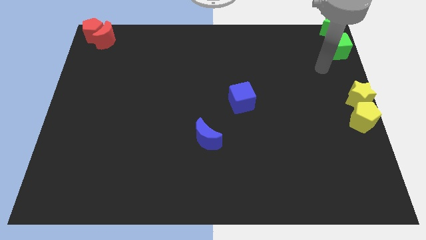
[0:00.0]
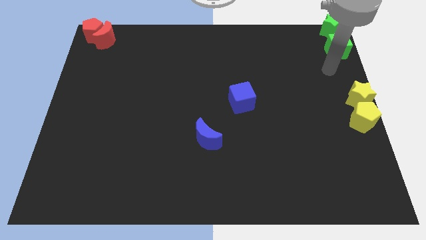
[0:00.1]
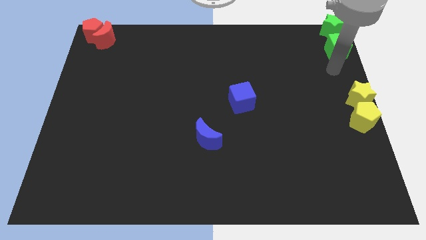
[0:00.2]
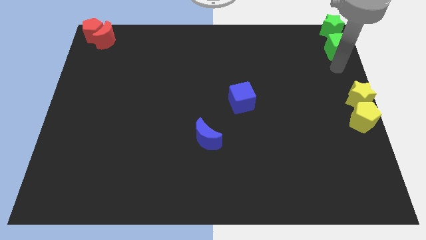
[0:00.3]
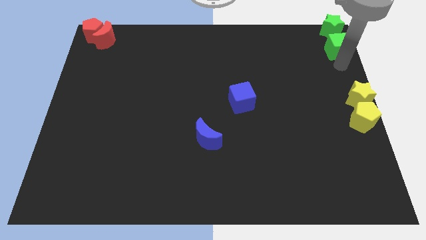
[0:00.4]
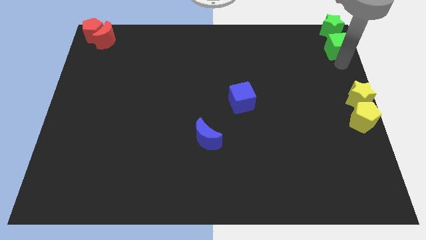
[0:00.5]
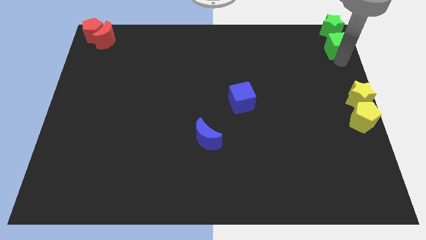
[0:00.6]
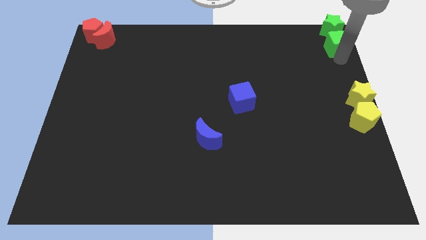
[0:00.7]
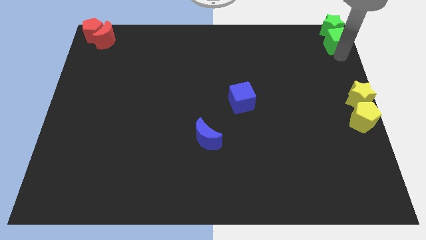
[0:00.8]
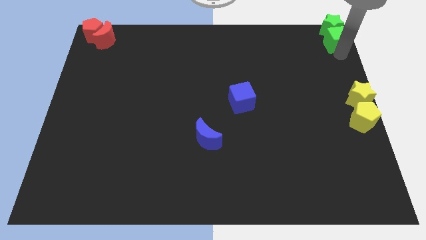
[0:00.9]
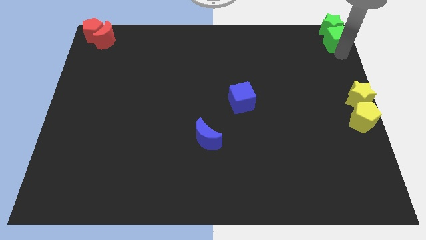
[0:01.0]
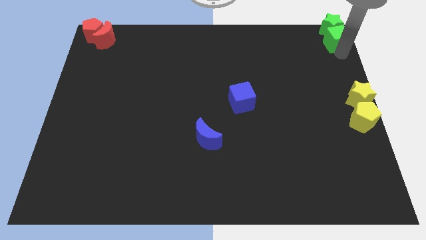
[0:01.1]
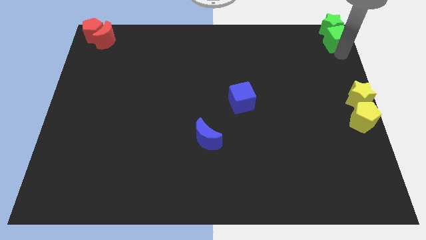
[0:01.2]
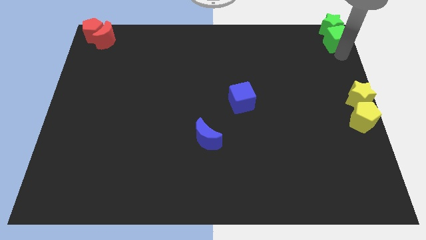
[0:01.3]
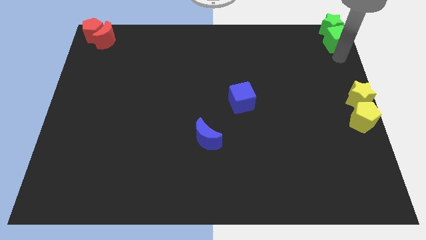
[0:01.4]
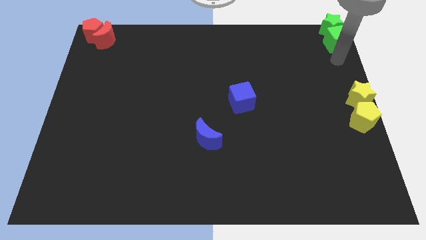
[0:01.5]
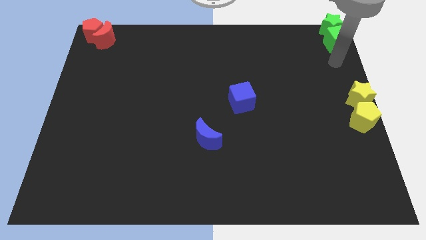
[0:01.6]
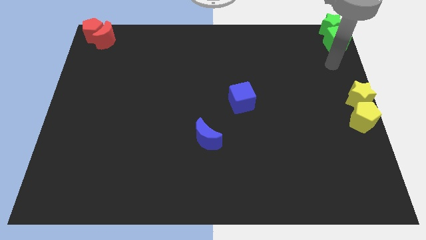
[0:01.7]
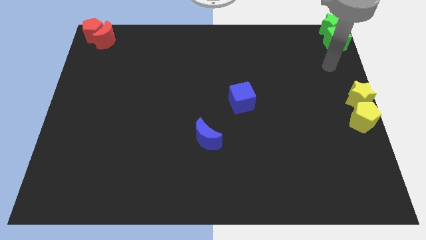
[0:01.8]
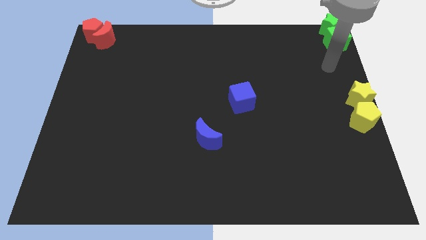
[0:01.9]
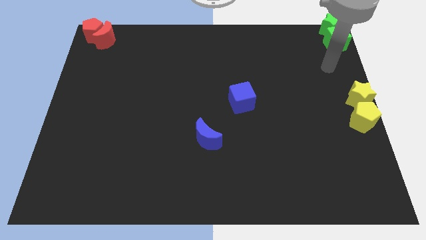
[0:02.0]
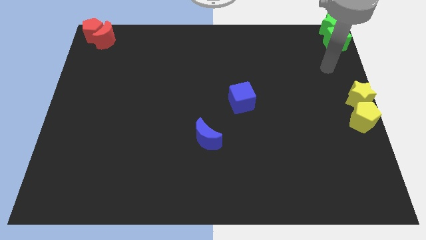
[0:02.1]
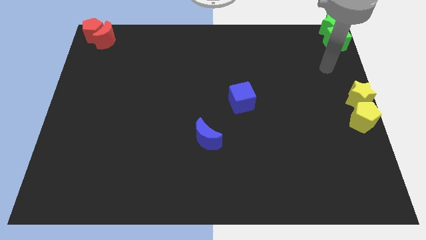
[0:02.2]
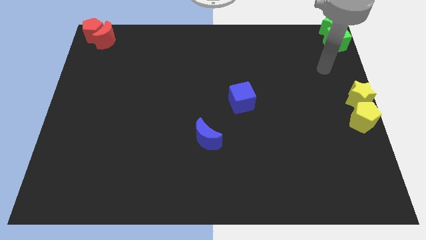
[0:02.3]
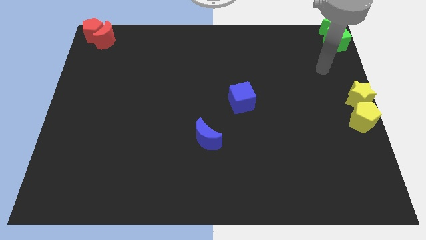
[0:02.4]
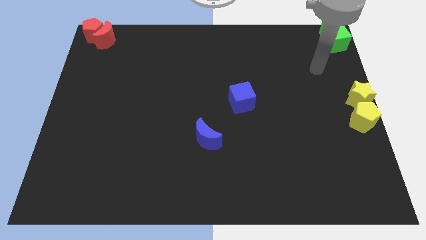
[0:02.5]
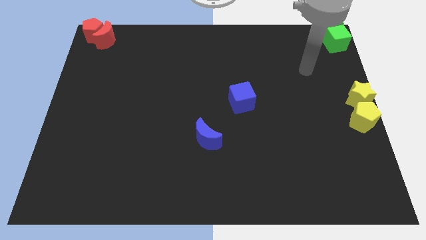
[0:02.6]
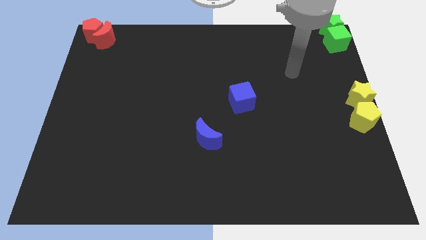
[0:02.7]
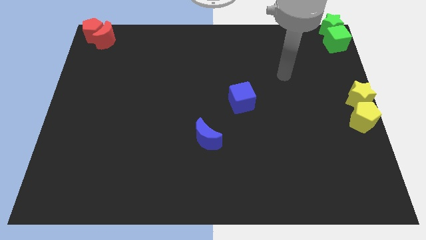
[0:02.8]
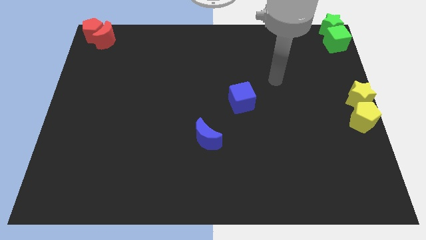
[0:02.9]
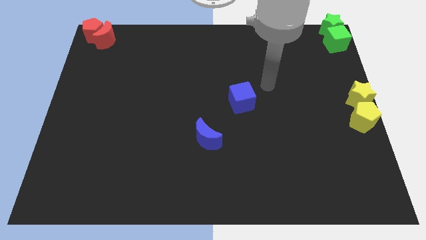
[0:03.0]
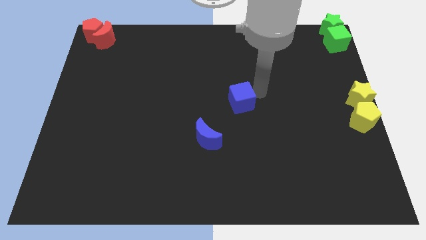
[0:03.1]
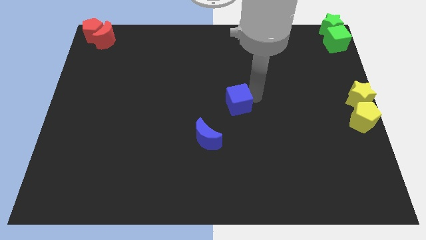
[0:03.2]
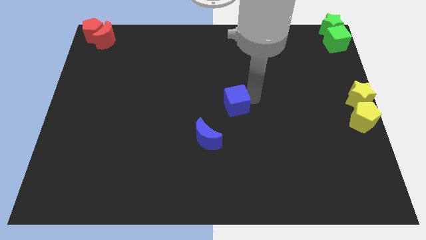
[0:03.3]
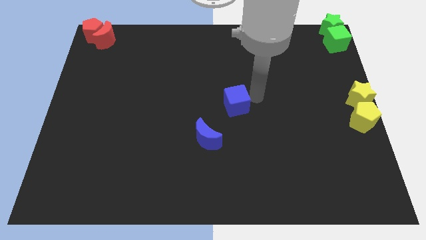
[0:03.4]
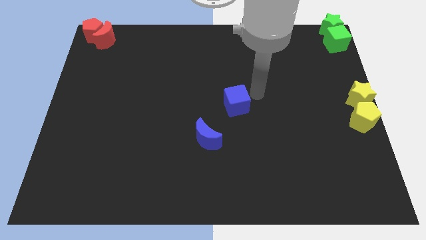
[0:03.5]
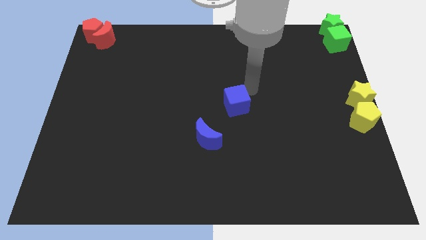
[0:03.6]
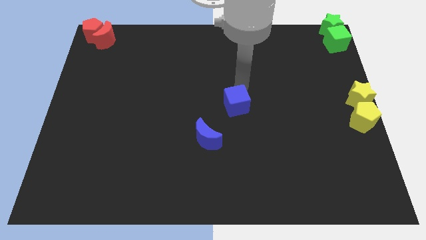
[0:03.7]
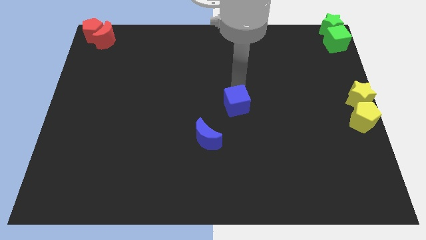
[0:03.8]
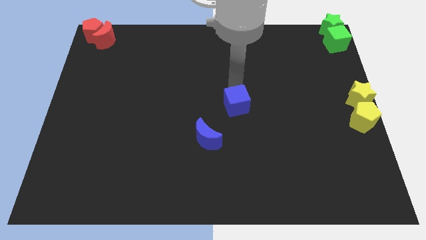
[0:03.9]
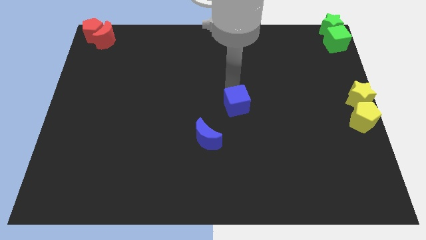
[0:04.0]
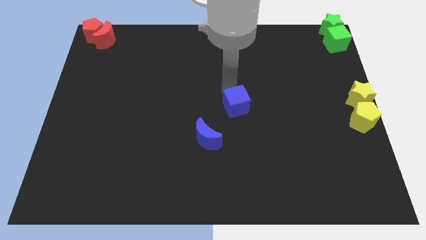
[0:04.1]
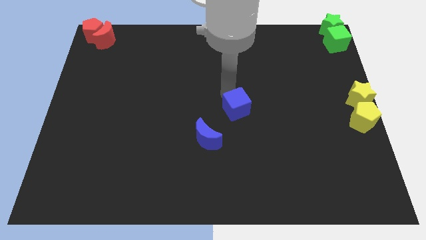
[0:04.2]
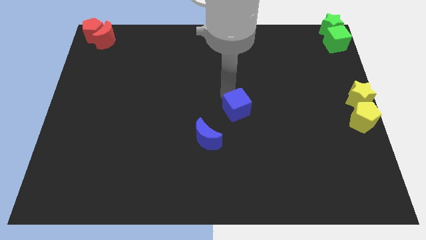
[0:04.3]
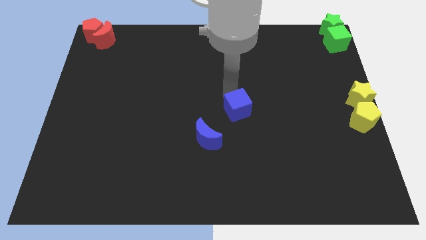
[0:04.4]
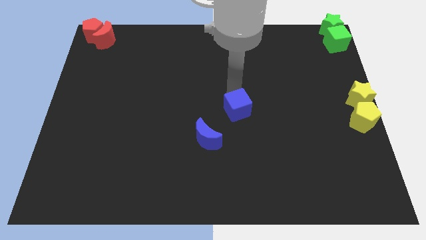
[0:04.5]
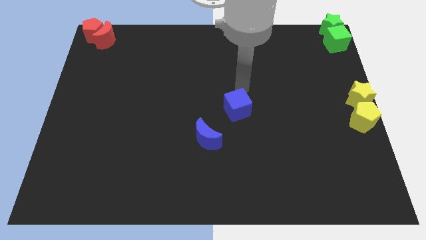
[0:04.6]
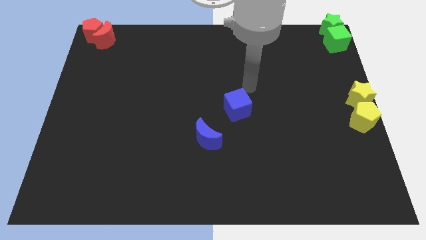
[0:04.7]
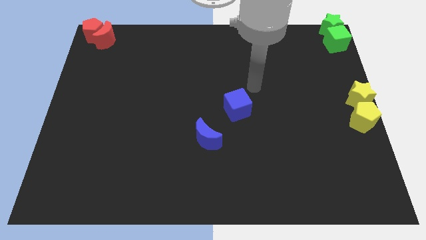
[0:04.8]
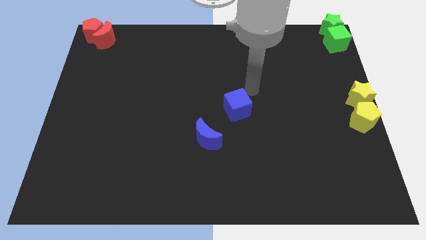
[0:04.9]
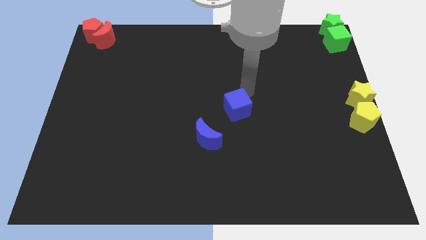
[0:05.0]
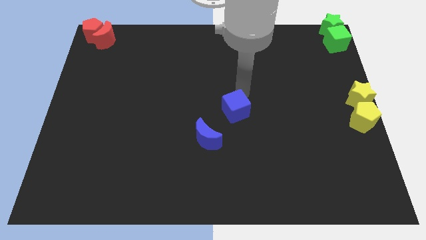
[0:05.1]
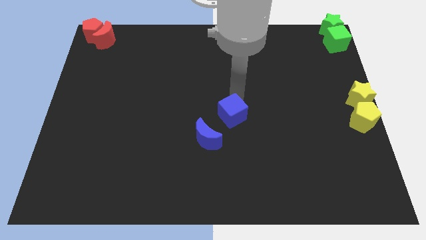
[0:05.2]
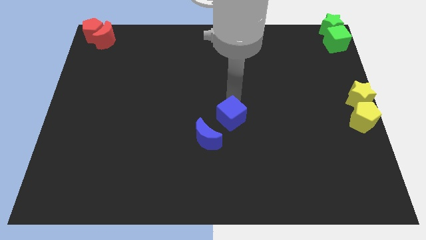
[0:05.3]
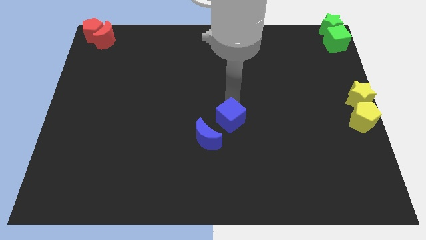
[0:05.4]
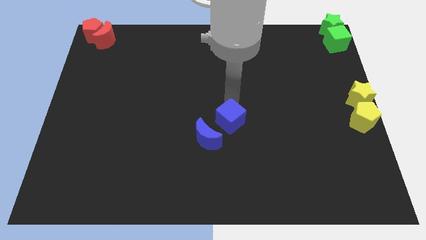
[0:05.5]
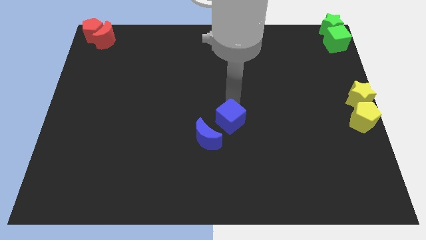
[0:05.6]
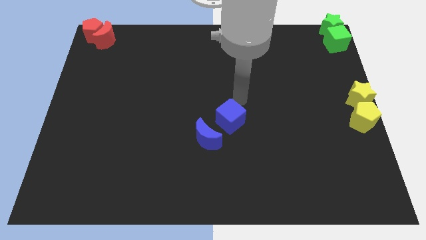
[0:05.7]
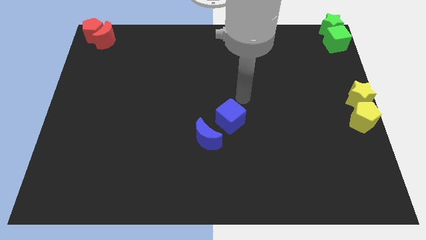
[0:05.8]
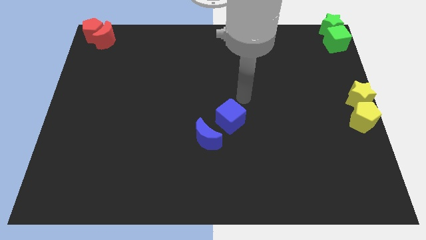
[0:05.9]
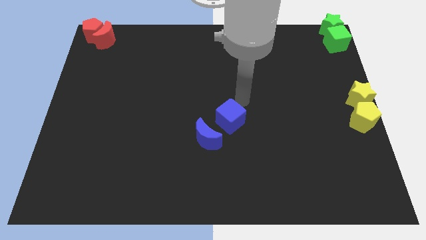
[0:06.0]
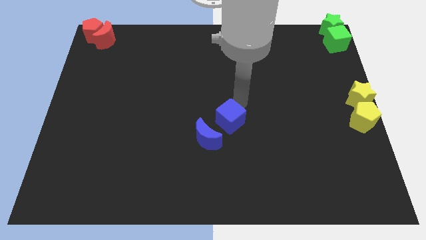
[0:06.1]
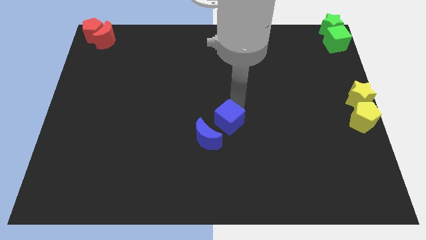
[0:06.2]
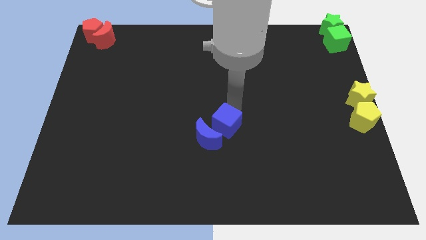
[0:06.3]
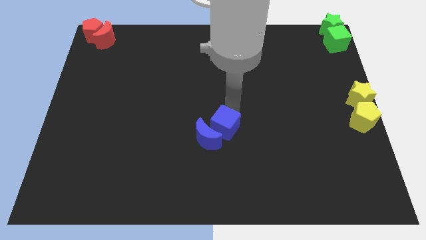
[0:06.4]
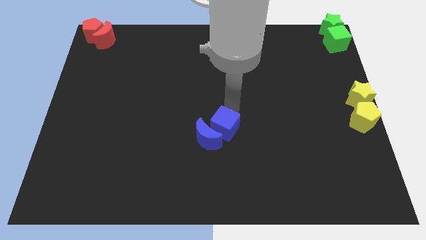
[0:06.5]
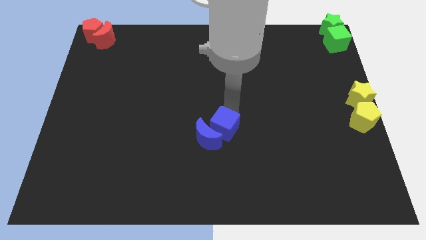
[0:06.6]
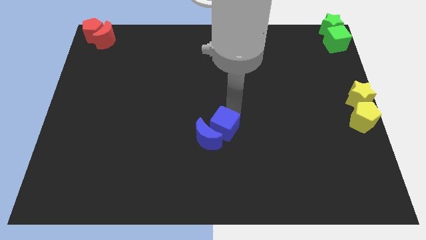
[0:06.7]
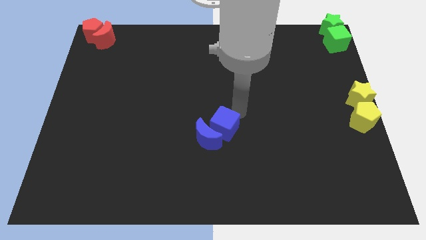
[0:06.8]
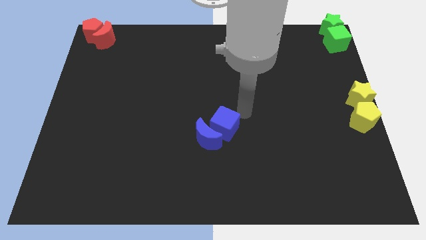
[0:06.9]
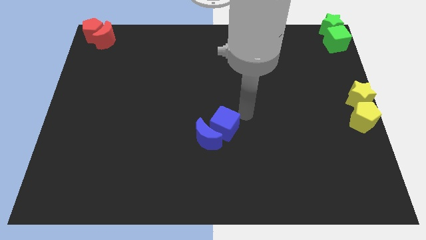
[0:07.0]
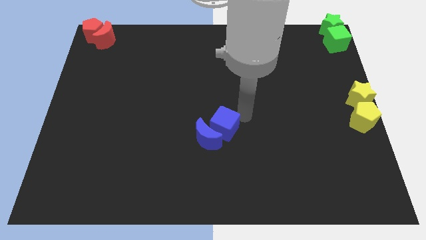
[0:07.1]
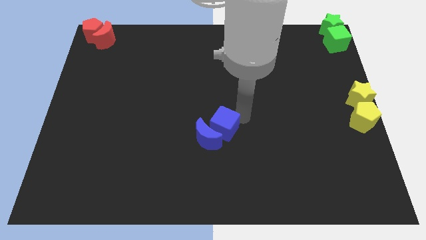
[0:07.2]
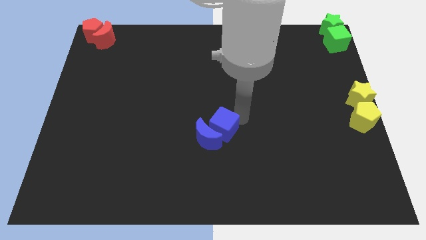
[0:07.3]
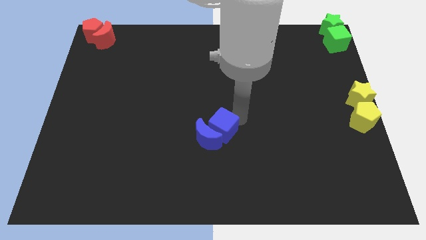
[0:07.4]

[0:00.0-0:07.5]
push the blue cube into the blue moon

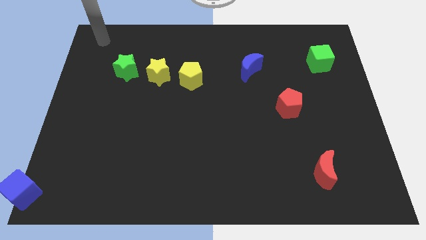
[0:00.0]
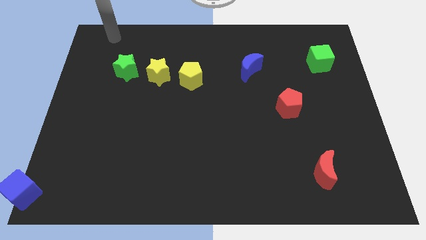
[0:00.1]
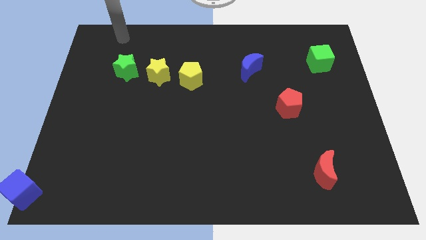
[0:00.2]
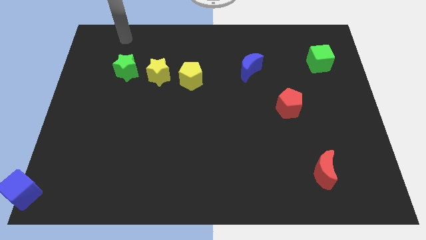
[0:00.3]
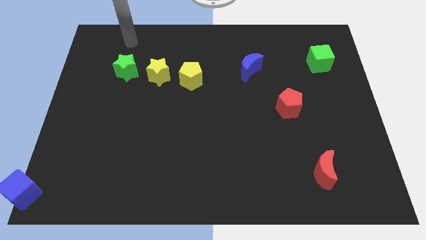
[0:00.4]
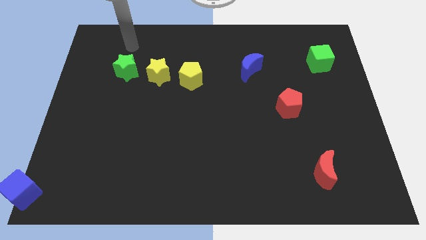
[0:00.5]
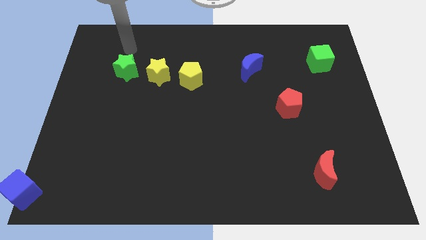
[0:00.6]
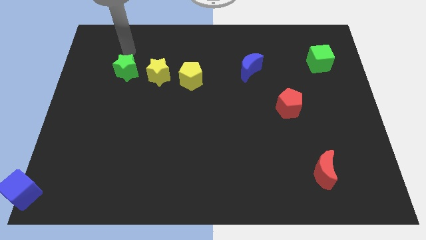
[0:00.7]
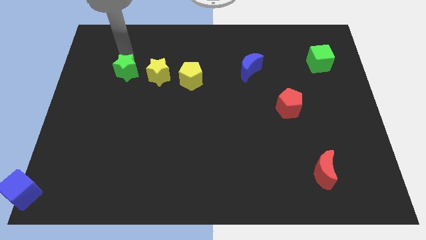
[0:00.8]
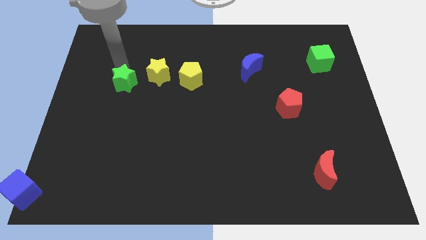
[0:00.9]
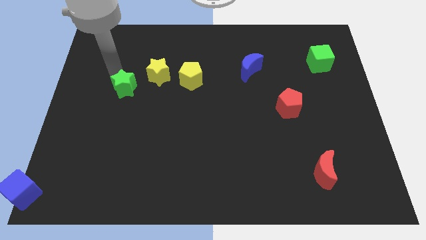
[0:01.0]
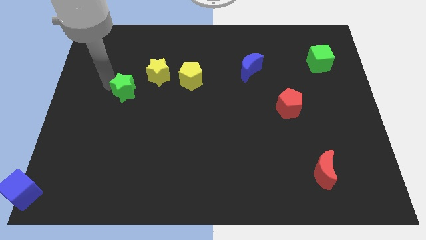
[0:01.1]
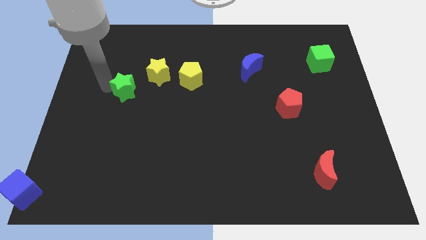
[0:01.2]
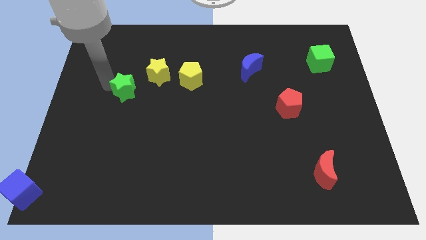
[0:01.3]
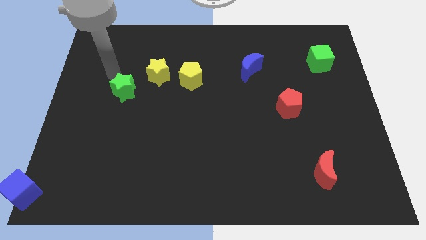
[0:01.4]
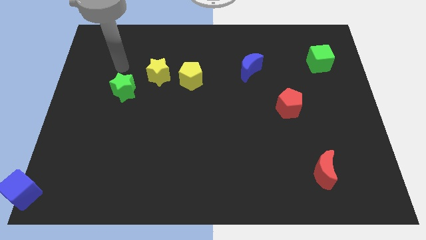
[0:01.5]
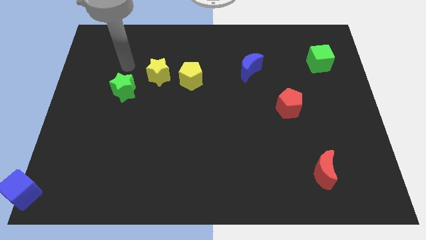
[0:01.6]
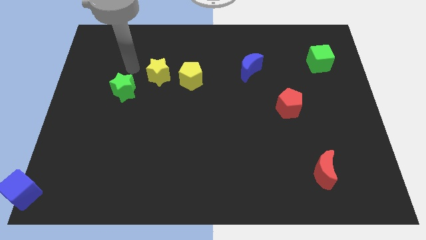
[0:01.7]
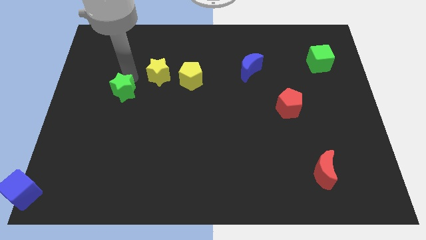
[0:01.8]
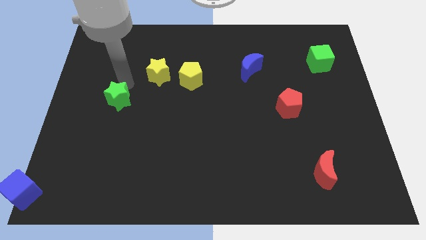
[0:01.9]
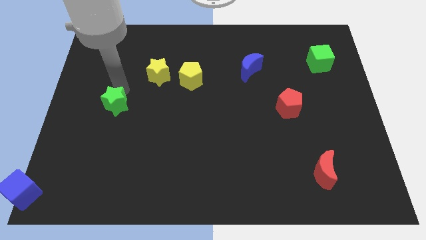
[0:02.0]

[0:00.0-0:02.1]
place green star diagonal to yellow star
